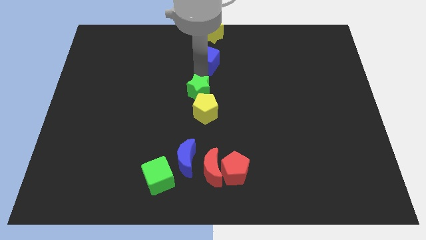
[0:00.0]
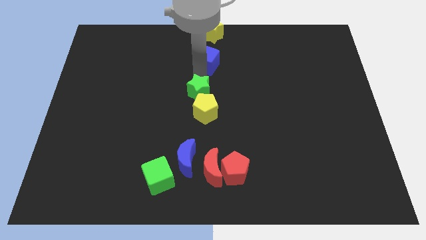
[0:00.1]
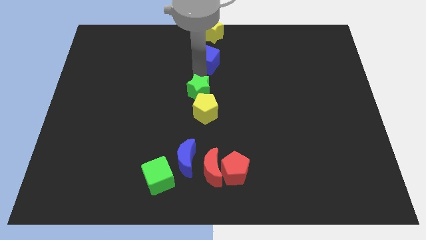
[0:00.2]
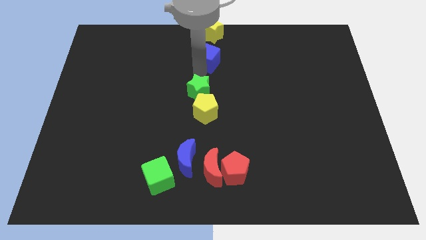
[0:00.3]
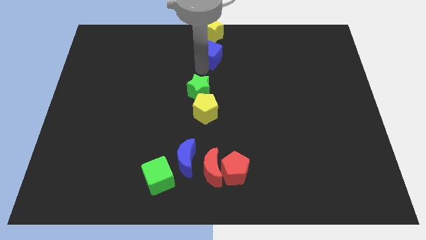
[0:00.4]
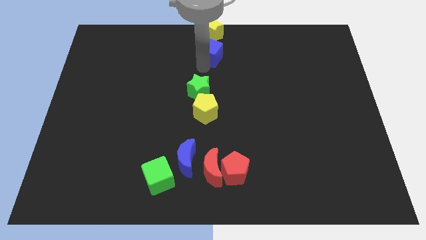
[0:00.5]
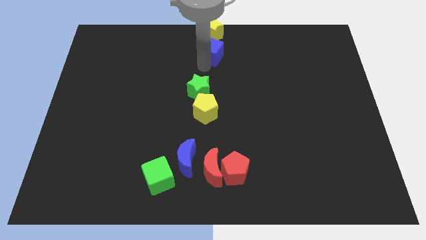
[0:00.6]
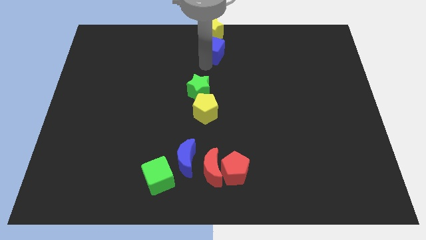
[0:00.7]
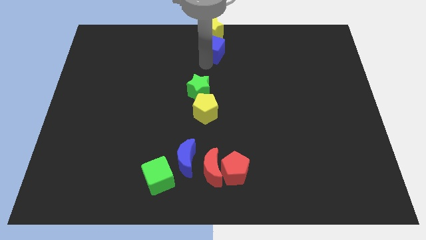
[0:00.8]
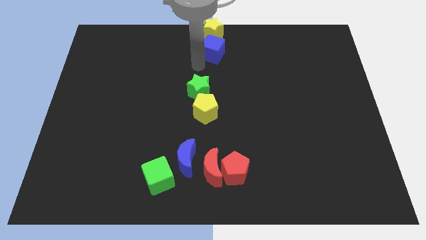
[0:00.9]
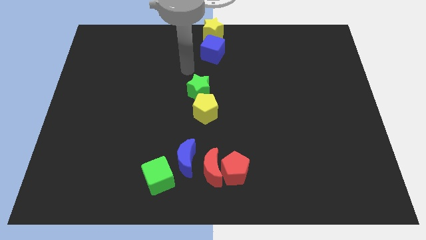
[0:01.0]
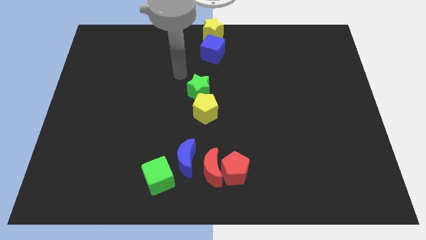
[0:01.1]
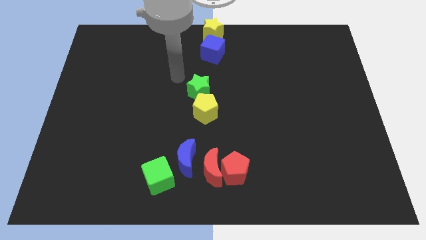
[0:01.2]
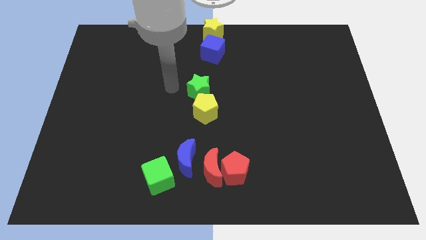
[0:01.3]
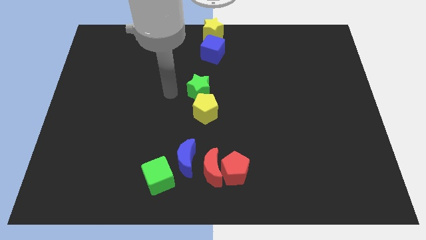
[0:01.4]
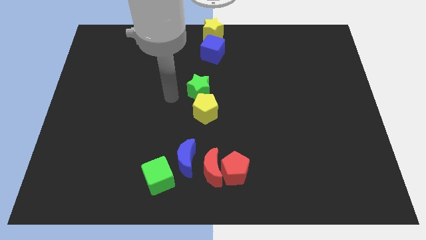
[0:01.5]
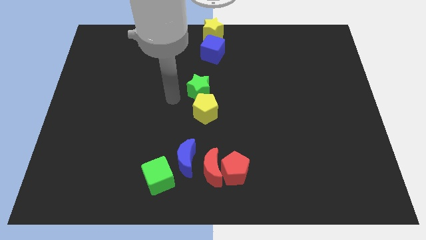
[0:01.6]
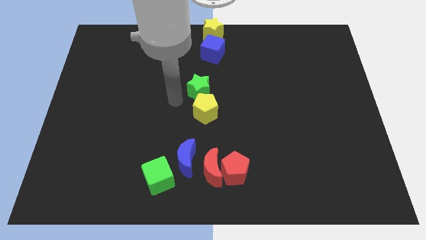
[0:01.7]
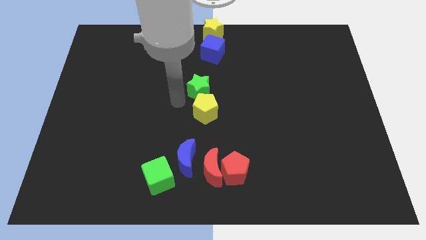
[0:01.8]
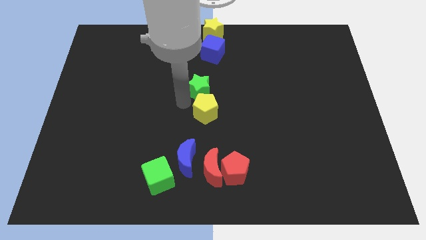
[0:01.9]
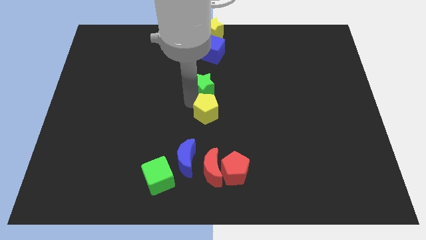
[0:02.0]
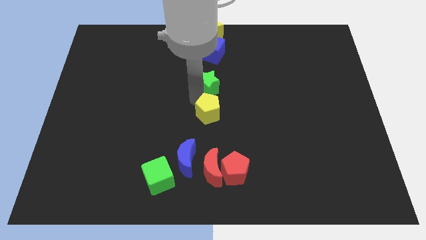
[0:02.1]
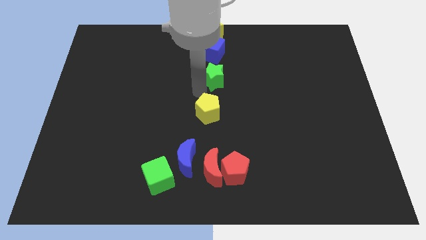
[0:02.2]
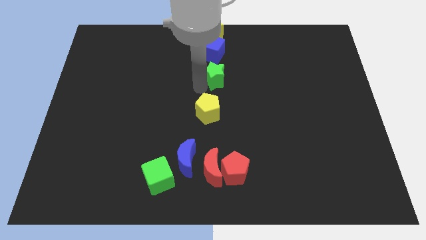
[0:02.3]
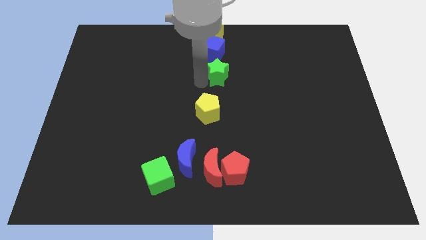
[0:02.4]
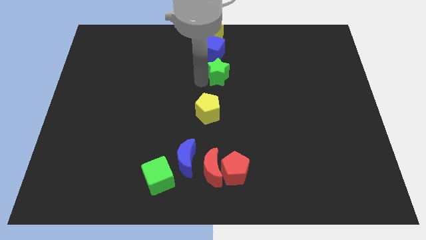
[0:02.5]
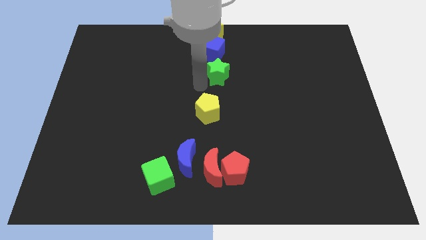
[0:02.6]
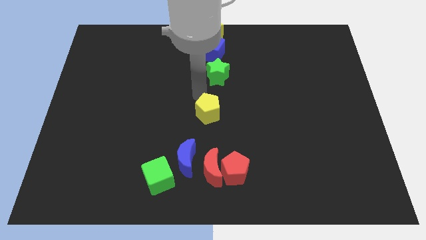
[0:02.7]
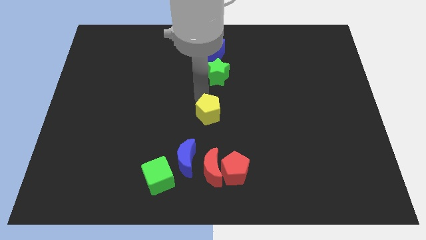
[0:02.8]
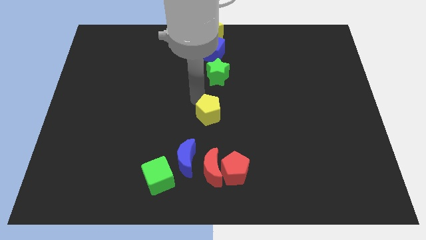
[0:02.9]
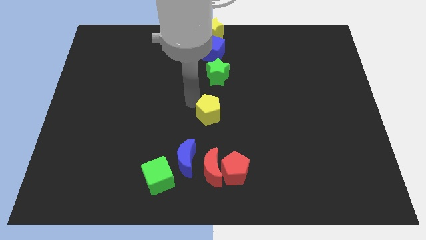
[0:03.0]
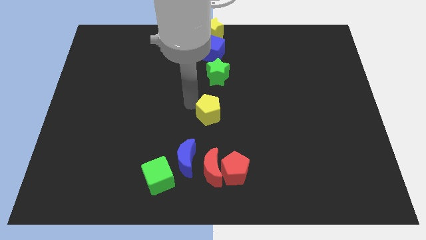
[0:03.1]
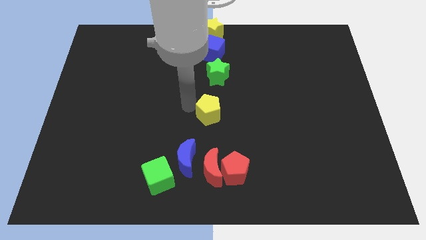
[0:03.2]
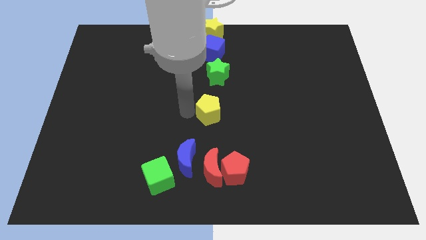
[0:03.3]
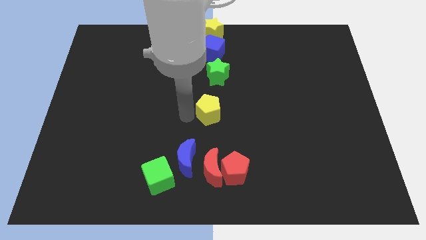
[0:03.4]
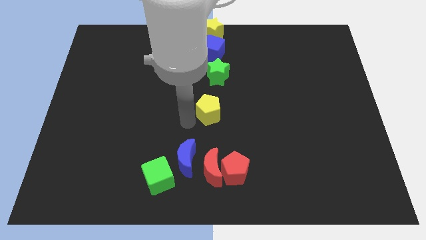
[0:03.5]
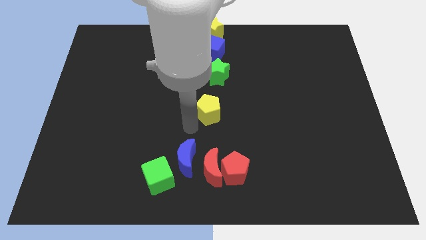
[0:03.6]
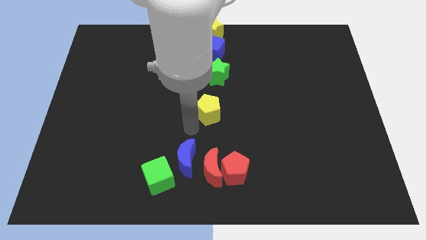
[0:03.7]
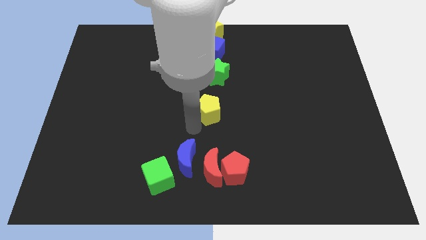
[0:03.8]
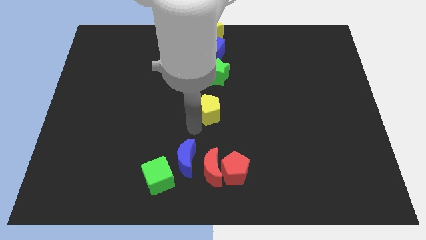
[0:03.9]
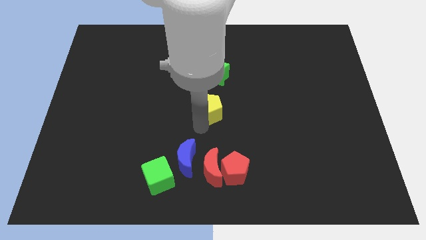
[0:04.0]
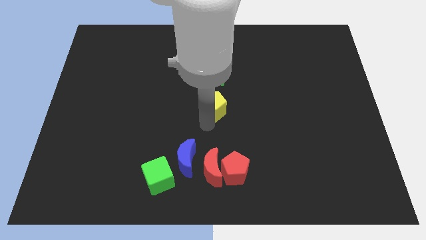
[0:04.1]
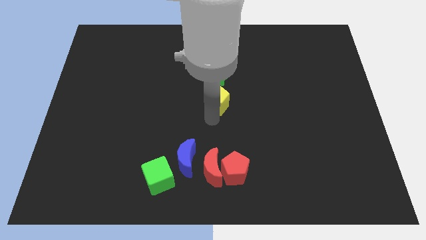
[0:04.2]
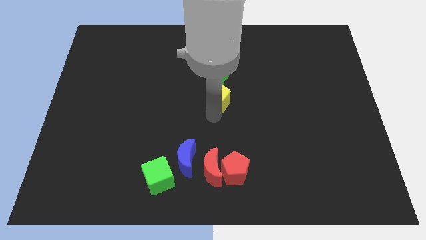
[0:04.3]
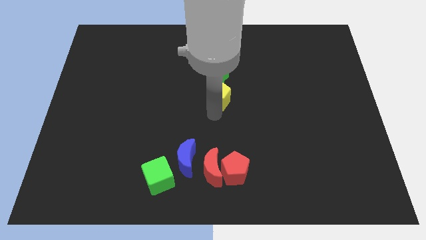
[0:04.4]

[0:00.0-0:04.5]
form a vertical line with yellow blocksgreen star and the blue cube

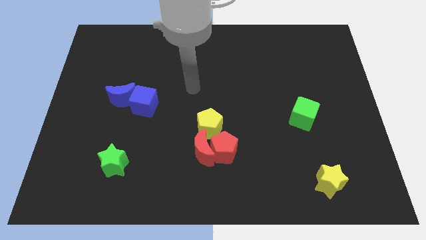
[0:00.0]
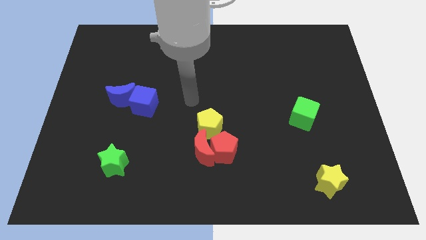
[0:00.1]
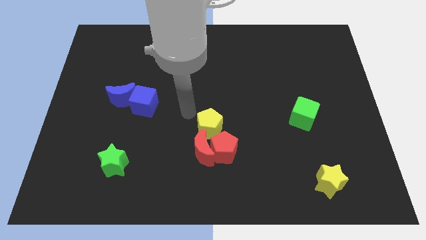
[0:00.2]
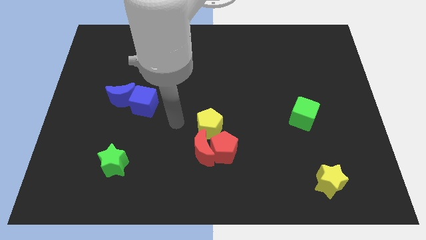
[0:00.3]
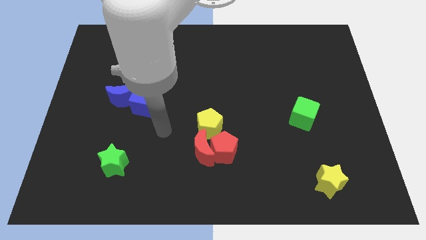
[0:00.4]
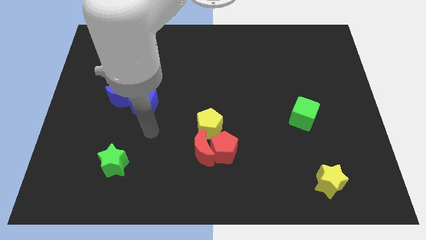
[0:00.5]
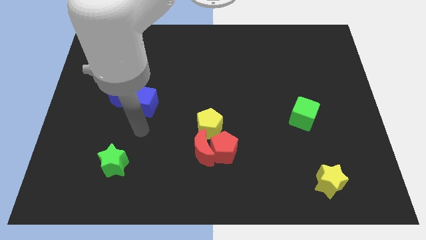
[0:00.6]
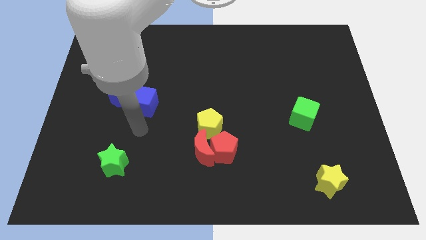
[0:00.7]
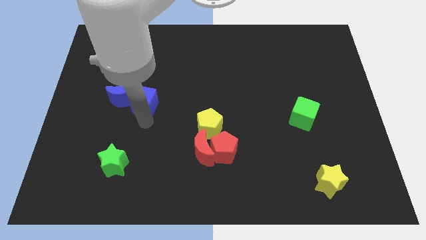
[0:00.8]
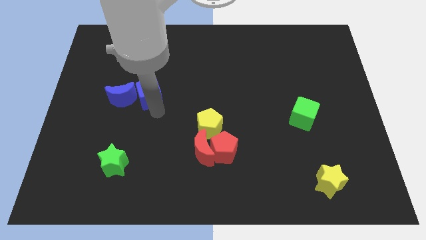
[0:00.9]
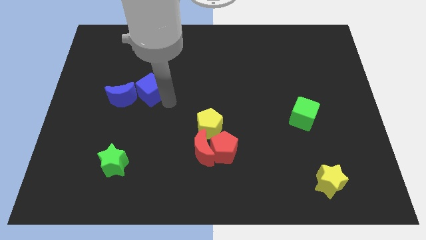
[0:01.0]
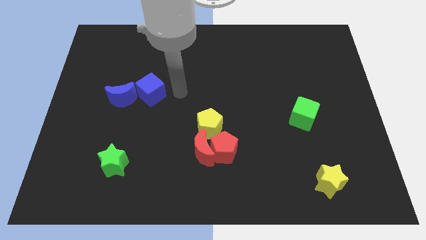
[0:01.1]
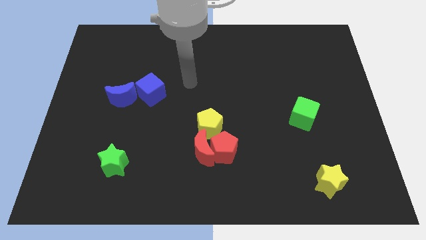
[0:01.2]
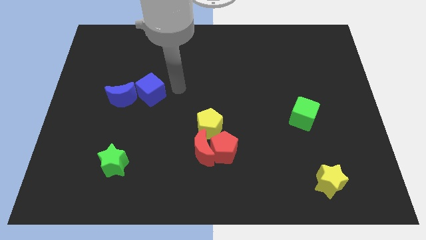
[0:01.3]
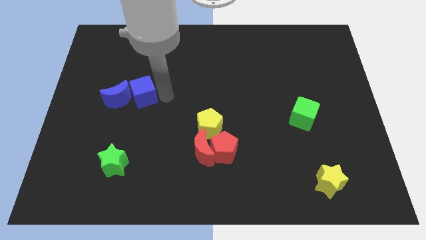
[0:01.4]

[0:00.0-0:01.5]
push the blue cube into the blue crescent

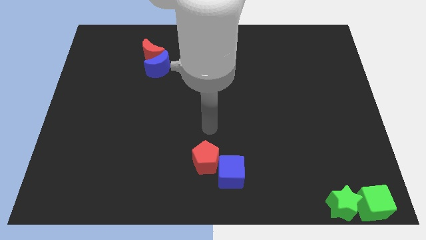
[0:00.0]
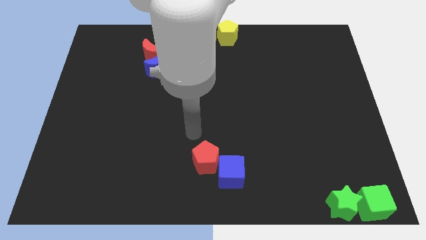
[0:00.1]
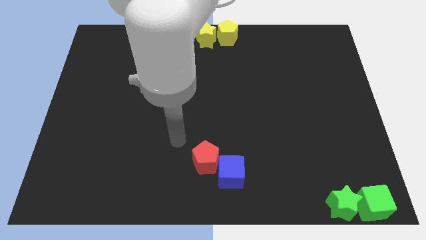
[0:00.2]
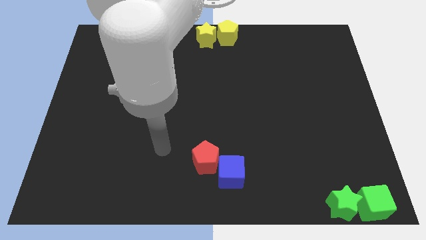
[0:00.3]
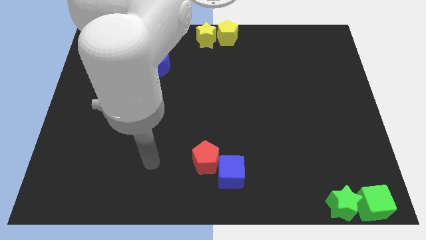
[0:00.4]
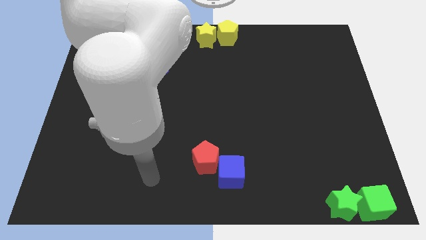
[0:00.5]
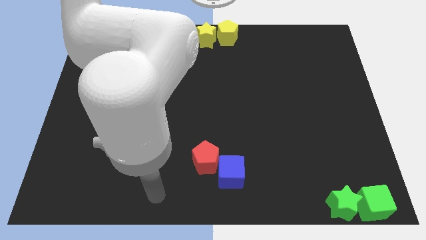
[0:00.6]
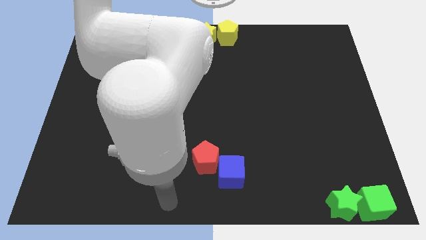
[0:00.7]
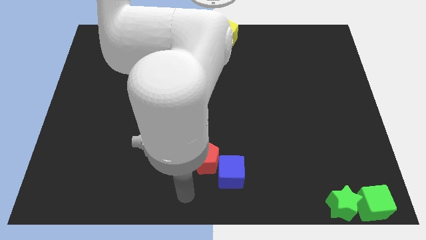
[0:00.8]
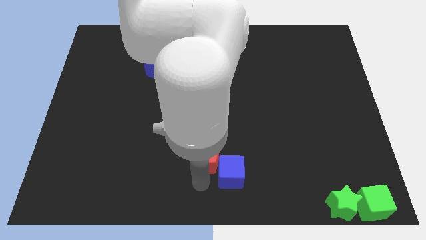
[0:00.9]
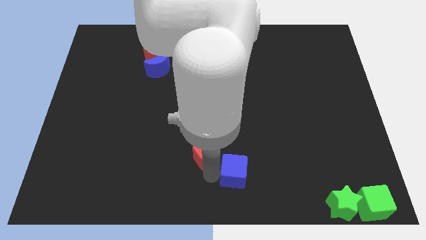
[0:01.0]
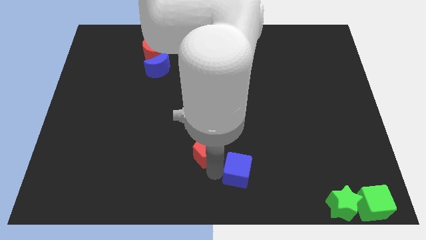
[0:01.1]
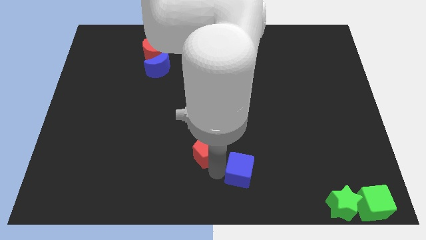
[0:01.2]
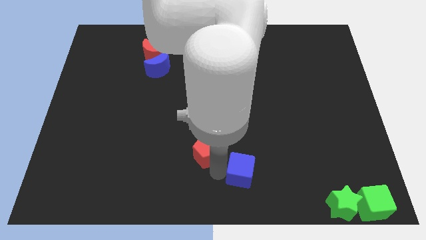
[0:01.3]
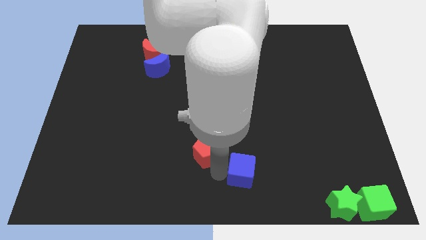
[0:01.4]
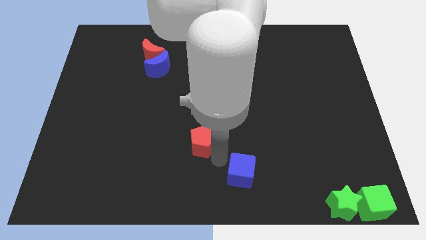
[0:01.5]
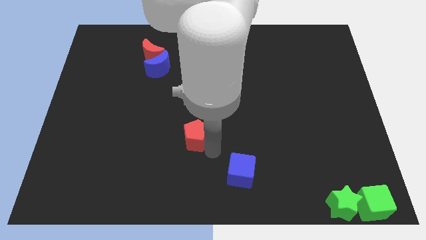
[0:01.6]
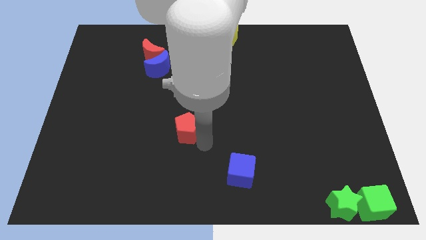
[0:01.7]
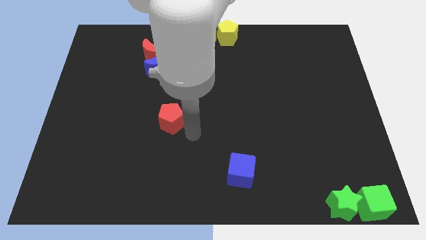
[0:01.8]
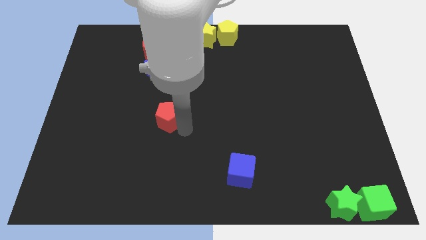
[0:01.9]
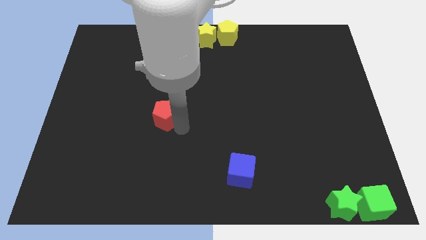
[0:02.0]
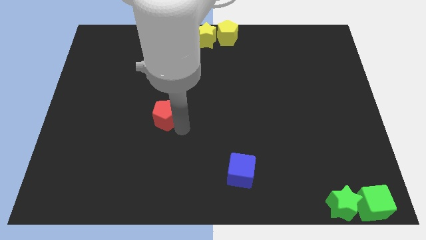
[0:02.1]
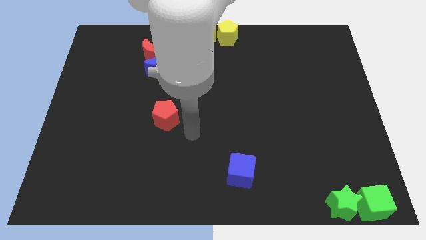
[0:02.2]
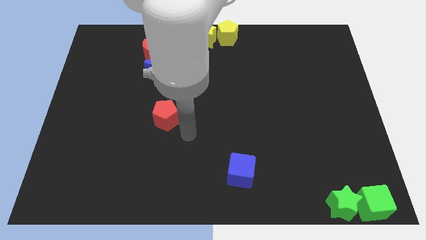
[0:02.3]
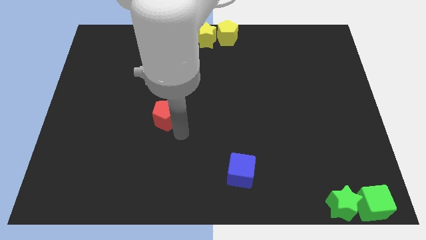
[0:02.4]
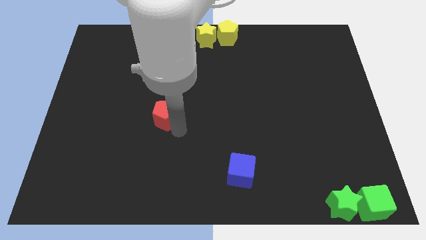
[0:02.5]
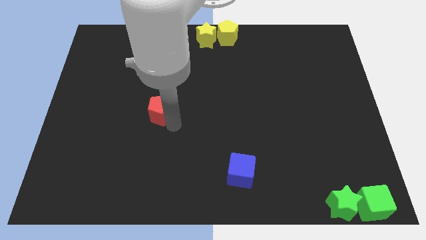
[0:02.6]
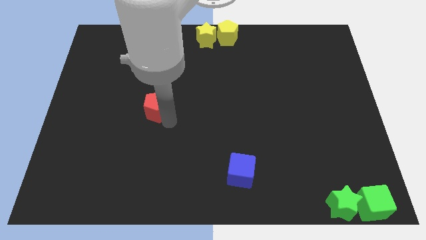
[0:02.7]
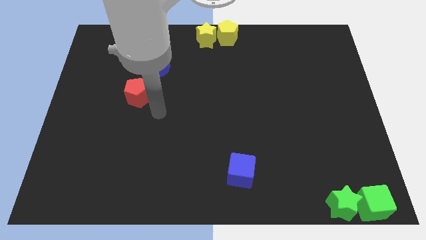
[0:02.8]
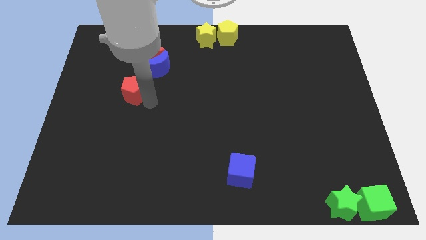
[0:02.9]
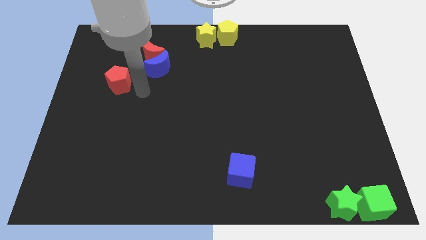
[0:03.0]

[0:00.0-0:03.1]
take the red pentagon away from the blue cube
